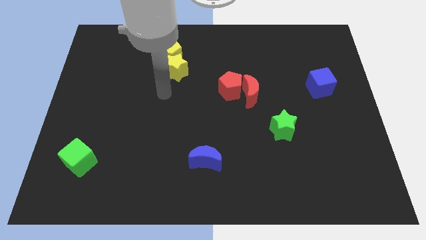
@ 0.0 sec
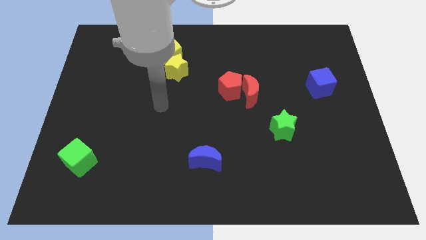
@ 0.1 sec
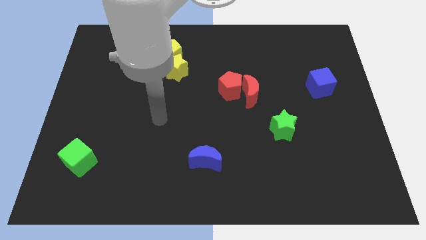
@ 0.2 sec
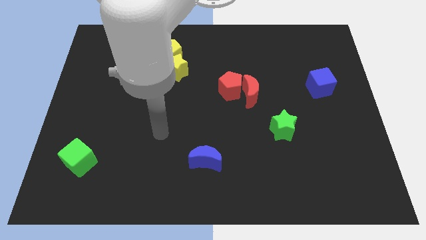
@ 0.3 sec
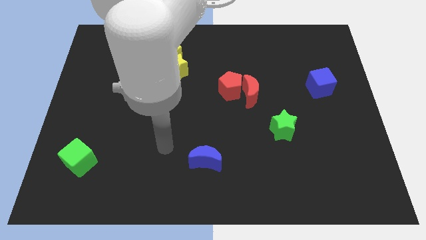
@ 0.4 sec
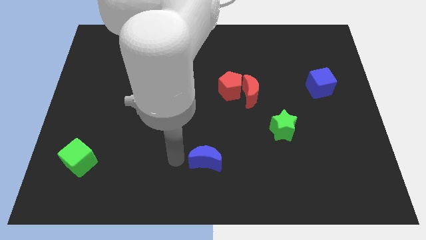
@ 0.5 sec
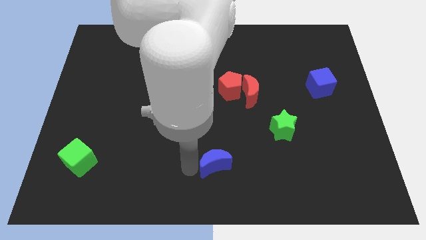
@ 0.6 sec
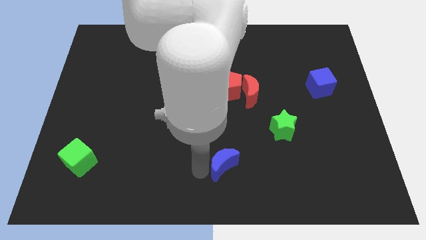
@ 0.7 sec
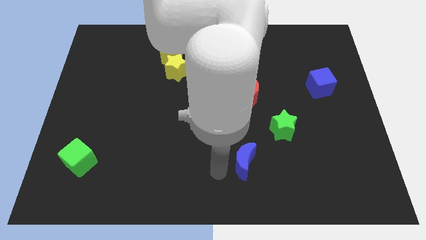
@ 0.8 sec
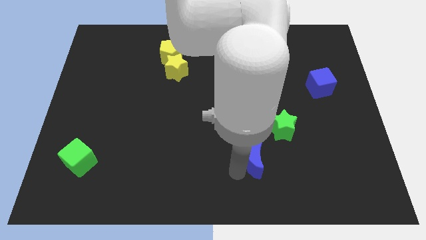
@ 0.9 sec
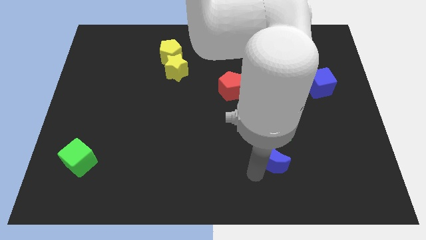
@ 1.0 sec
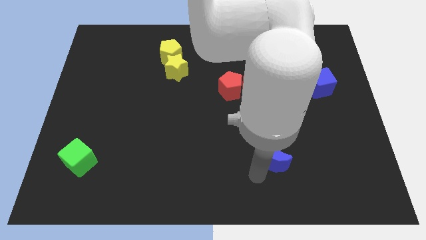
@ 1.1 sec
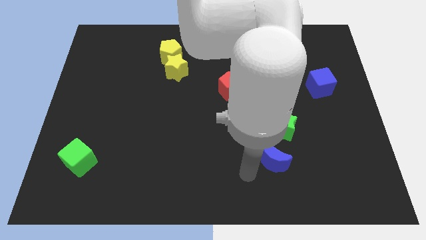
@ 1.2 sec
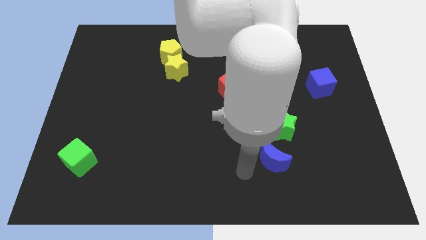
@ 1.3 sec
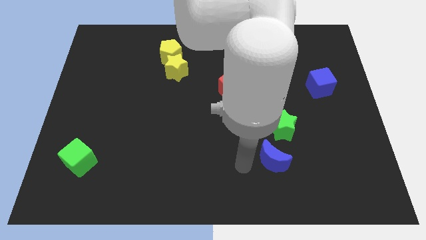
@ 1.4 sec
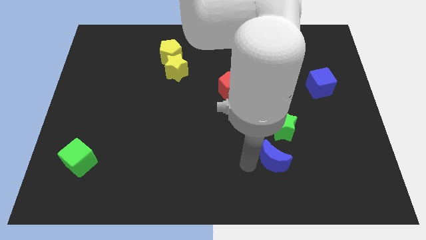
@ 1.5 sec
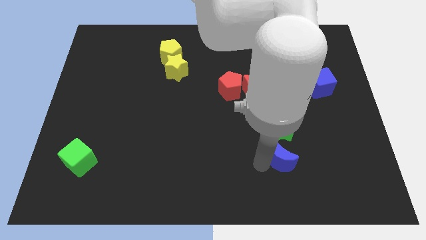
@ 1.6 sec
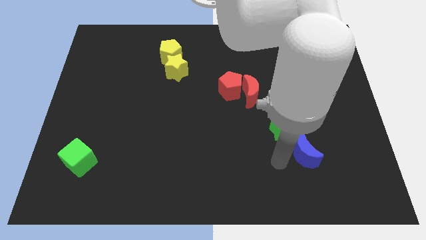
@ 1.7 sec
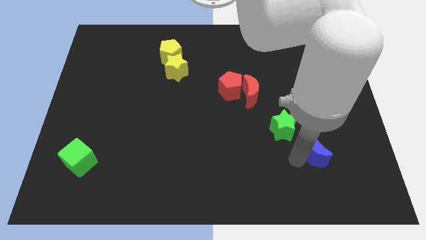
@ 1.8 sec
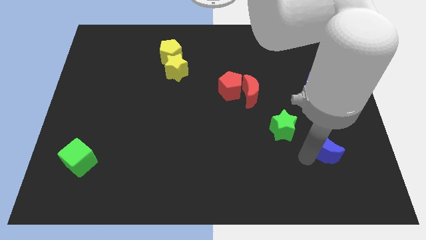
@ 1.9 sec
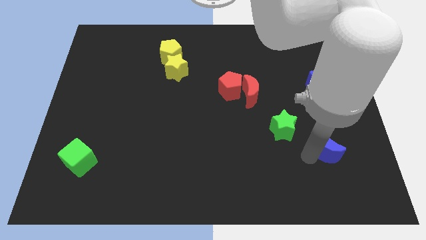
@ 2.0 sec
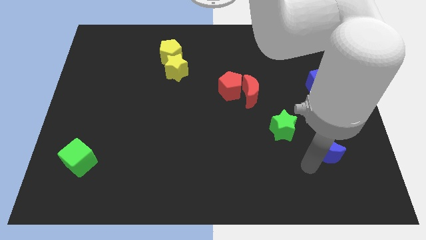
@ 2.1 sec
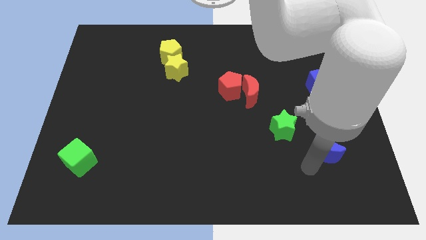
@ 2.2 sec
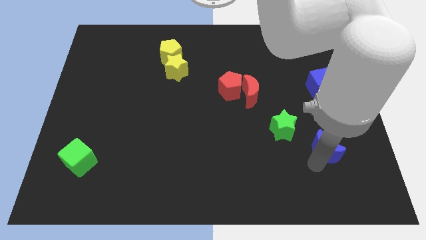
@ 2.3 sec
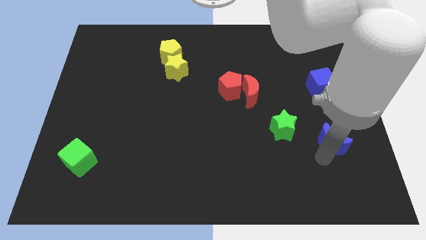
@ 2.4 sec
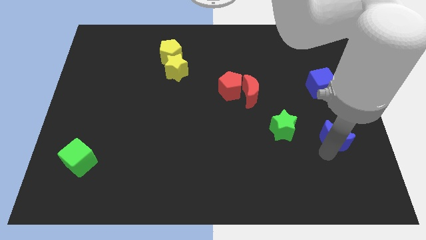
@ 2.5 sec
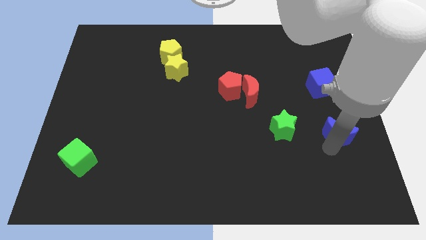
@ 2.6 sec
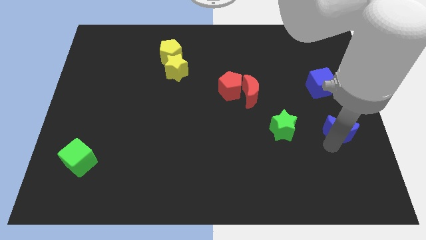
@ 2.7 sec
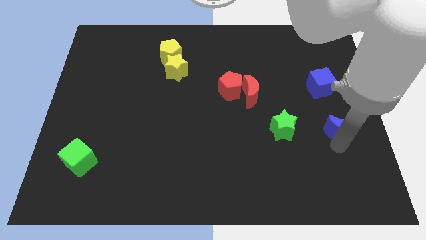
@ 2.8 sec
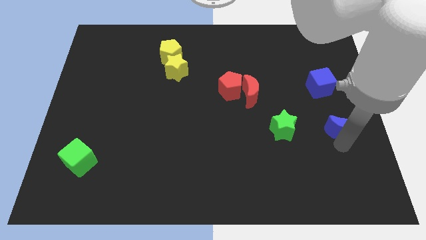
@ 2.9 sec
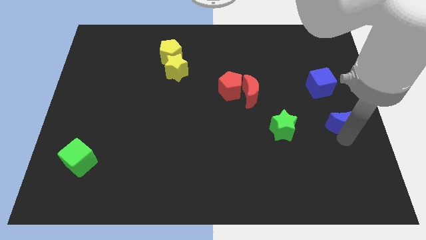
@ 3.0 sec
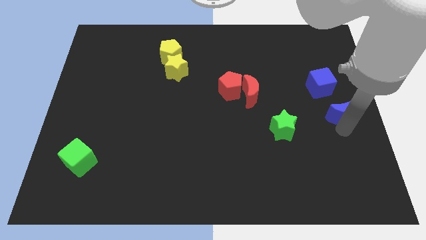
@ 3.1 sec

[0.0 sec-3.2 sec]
drag the blue moon slightly to the right

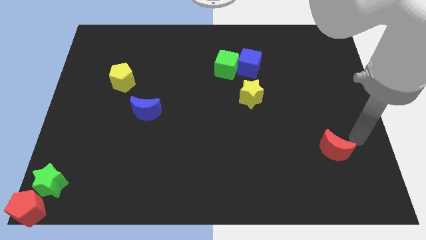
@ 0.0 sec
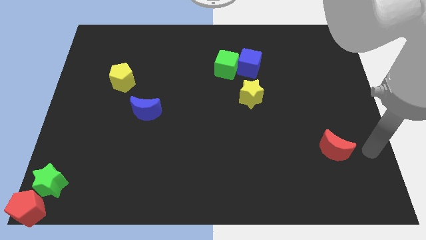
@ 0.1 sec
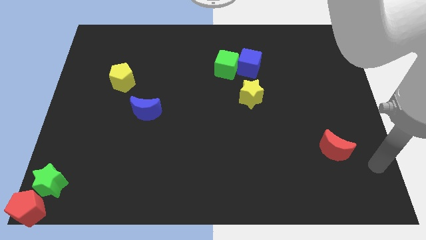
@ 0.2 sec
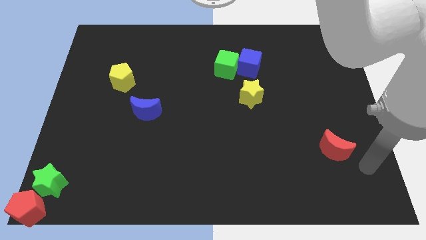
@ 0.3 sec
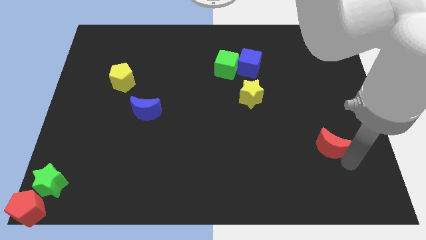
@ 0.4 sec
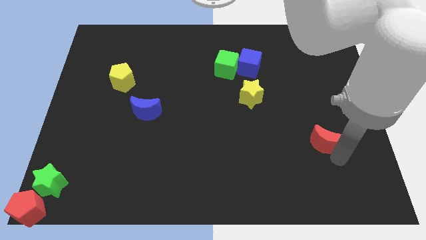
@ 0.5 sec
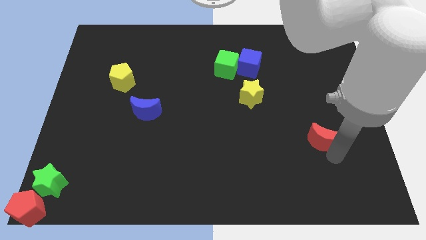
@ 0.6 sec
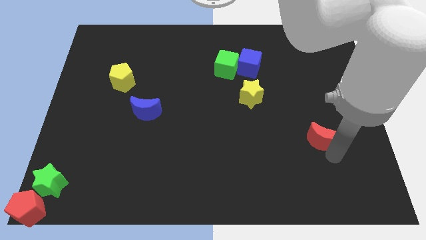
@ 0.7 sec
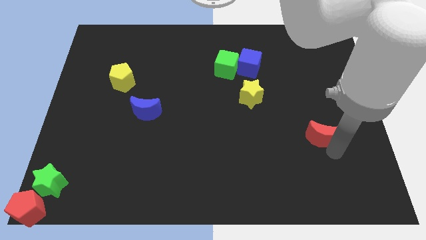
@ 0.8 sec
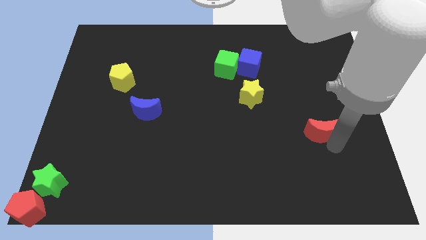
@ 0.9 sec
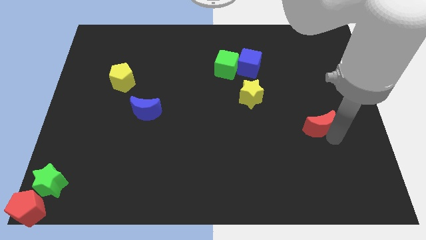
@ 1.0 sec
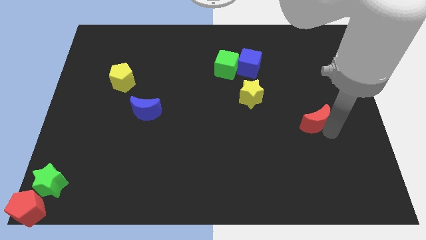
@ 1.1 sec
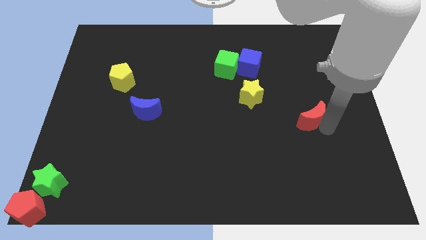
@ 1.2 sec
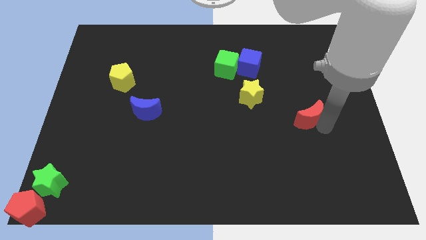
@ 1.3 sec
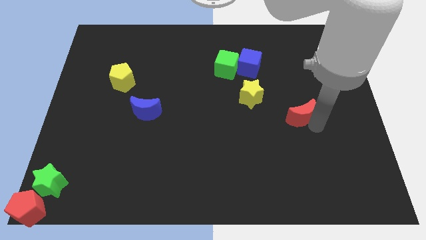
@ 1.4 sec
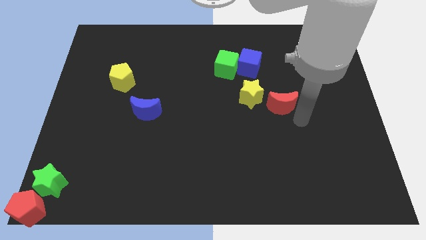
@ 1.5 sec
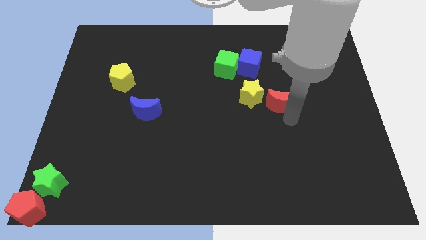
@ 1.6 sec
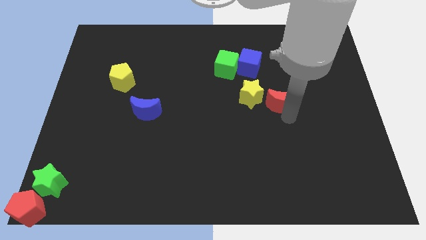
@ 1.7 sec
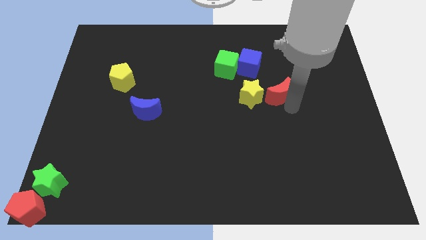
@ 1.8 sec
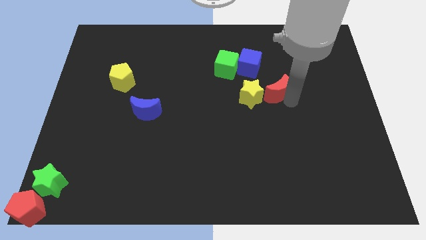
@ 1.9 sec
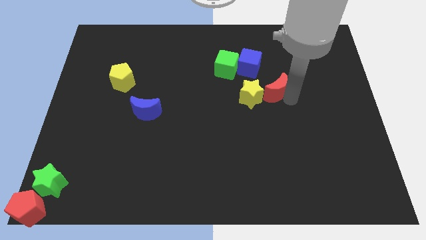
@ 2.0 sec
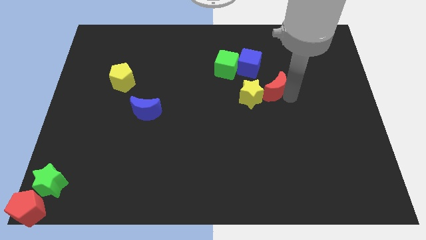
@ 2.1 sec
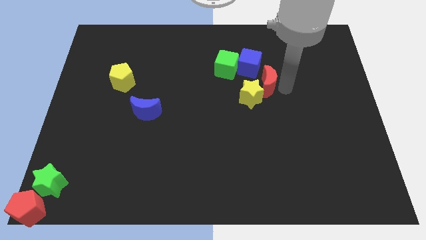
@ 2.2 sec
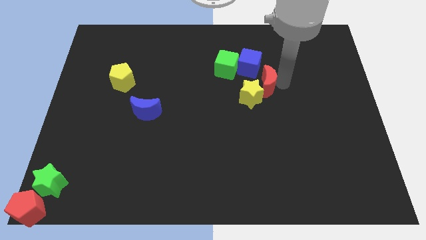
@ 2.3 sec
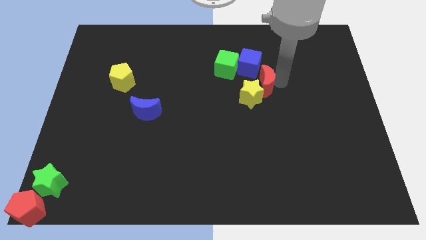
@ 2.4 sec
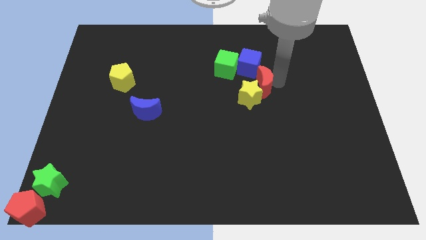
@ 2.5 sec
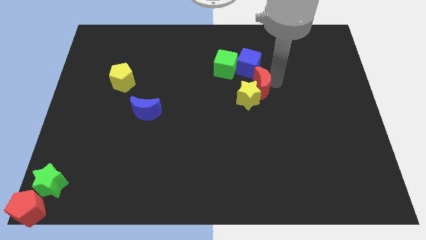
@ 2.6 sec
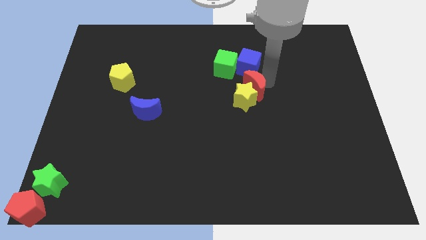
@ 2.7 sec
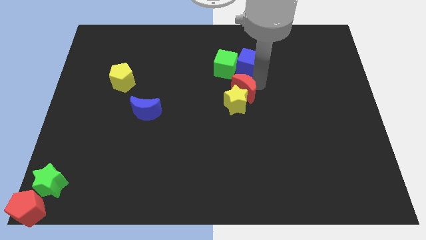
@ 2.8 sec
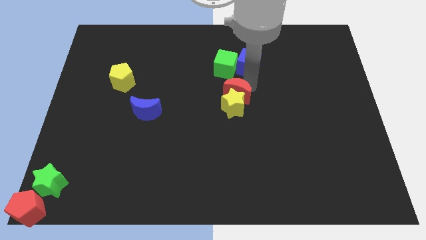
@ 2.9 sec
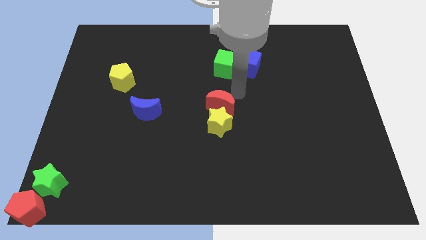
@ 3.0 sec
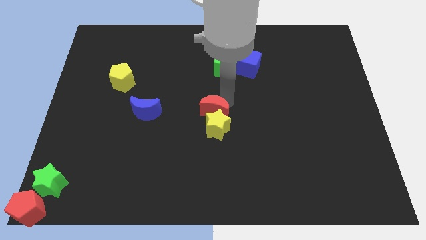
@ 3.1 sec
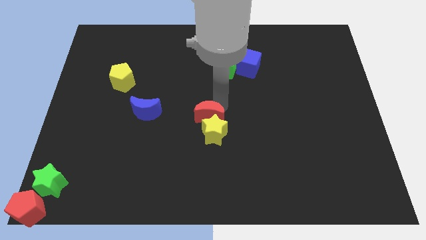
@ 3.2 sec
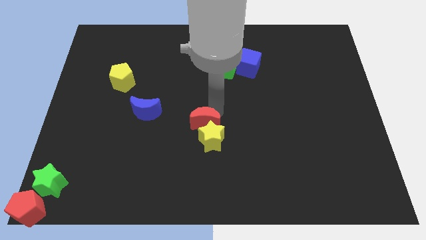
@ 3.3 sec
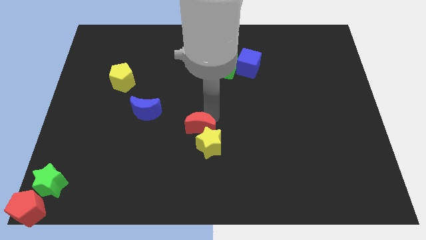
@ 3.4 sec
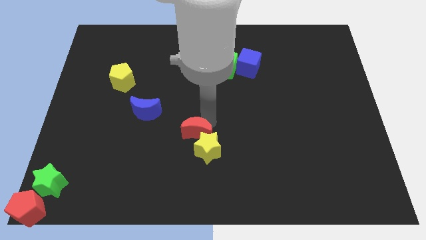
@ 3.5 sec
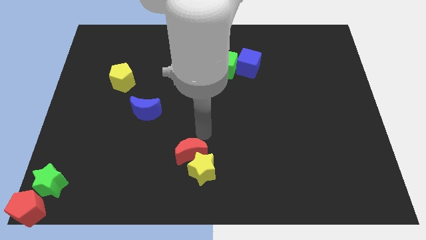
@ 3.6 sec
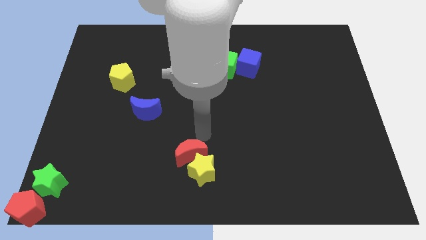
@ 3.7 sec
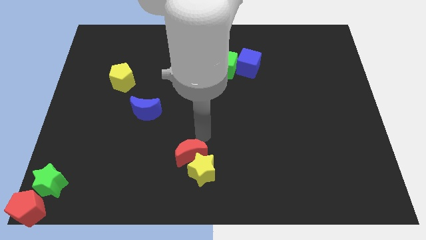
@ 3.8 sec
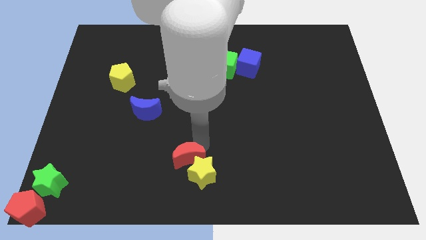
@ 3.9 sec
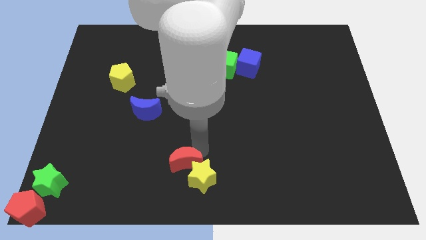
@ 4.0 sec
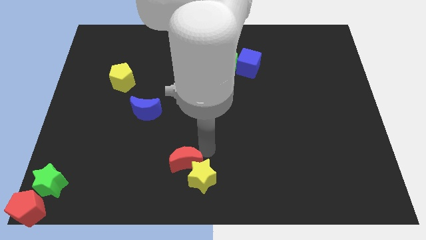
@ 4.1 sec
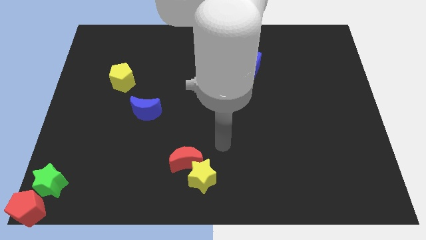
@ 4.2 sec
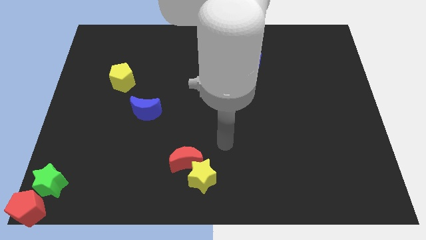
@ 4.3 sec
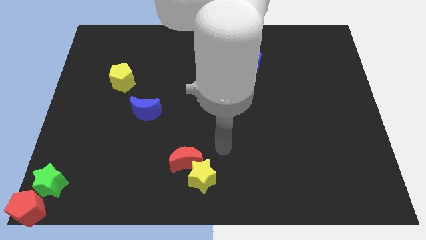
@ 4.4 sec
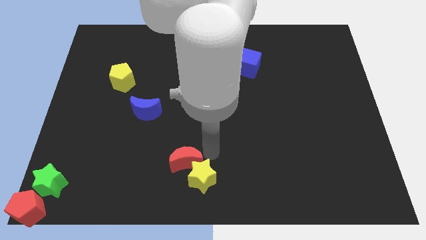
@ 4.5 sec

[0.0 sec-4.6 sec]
push the yellow star towards the bottom of the board with the help of the red crescent

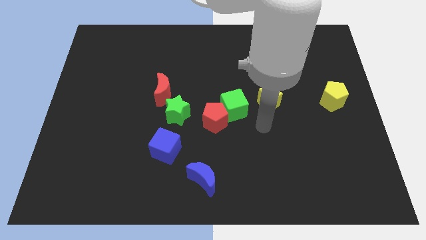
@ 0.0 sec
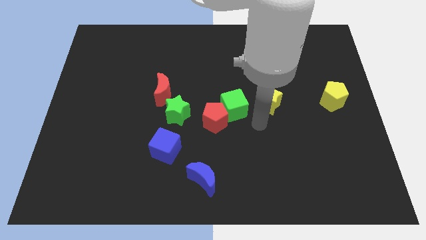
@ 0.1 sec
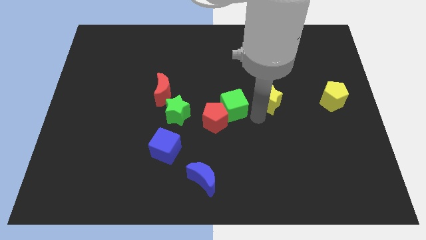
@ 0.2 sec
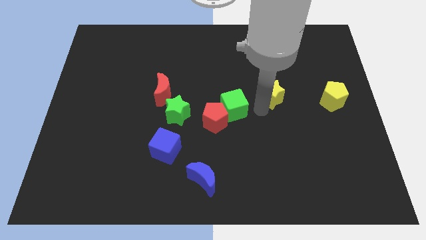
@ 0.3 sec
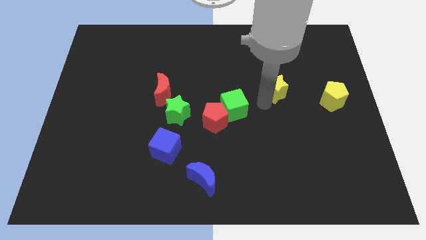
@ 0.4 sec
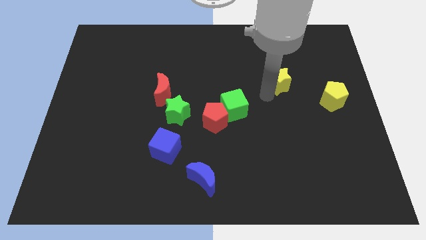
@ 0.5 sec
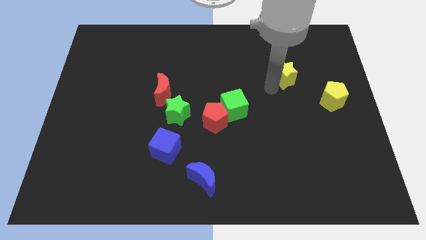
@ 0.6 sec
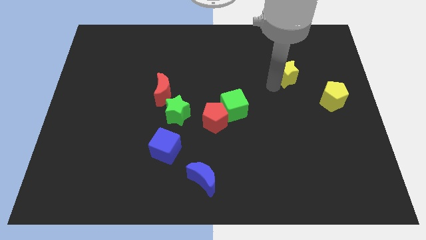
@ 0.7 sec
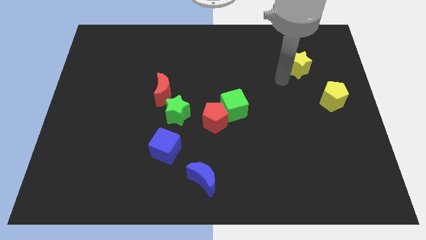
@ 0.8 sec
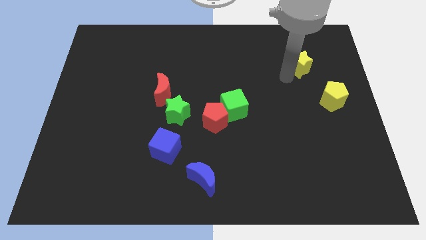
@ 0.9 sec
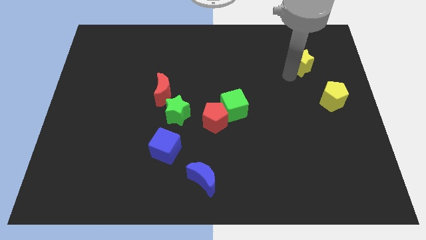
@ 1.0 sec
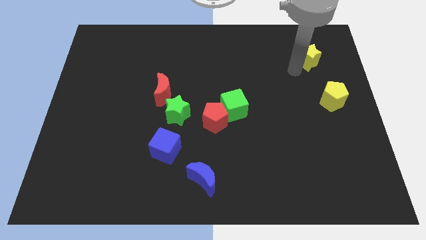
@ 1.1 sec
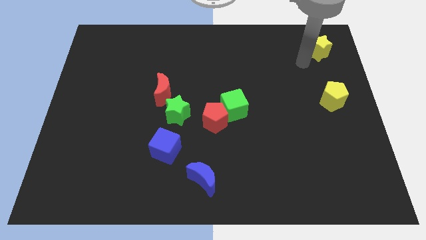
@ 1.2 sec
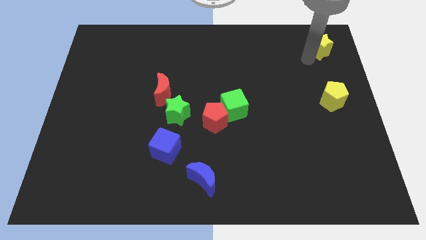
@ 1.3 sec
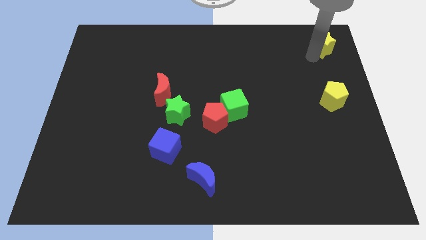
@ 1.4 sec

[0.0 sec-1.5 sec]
push the yellow star to the right side of the board
